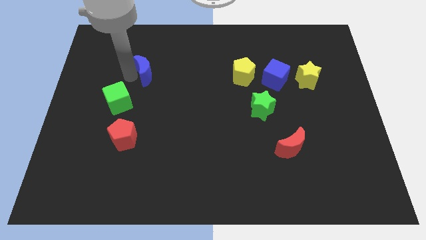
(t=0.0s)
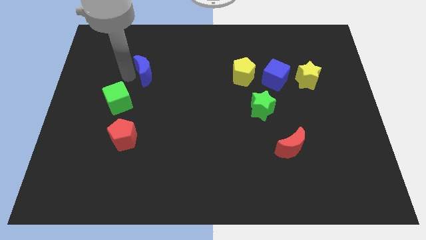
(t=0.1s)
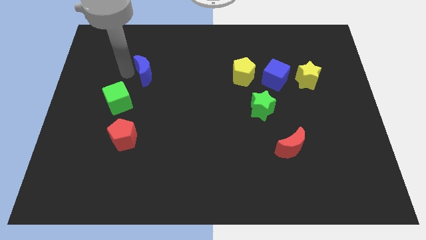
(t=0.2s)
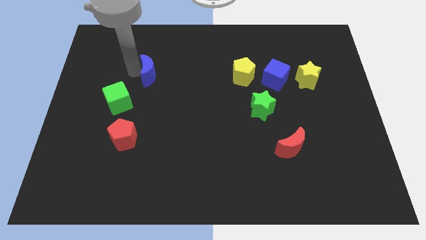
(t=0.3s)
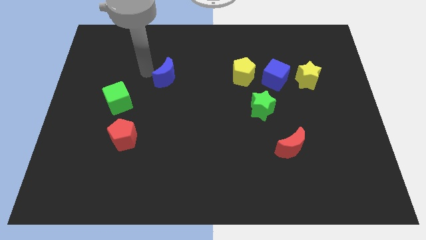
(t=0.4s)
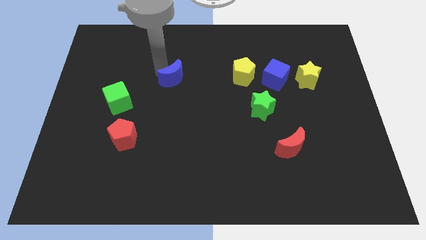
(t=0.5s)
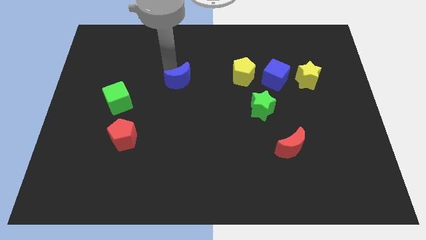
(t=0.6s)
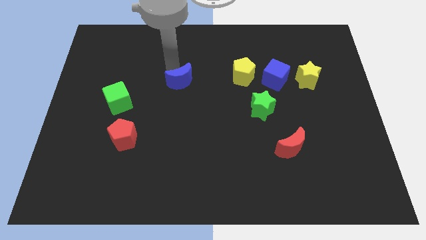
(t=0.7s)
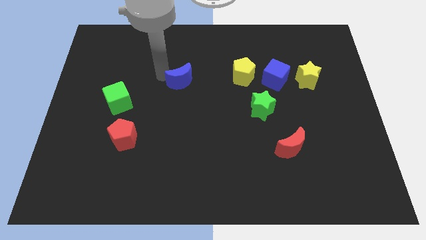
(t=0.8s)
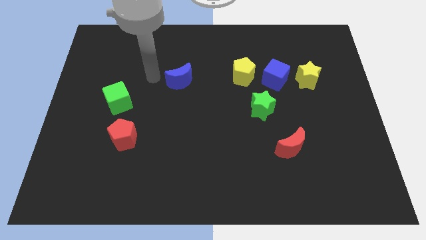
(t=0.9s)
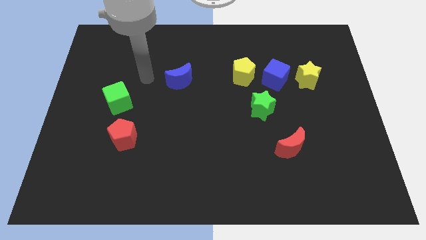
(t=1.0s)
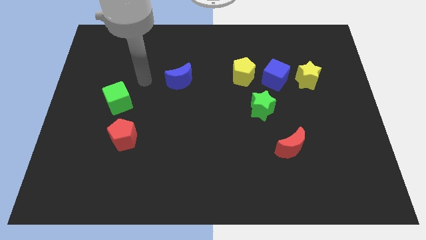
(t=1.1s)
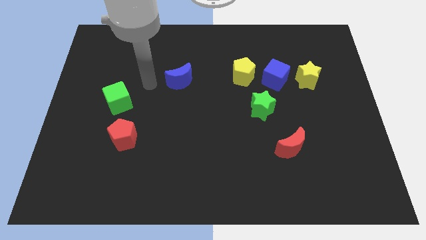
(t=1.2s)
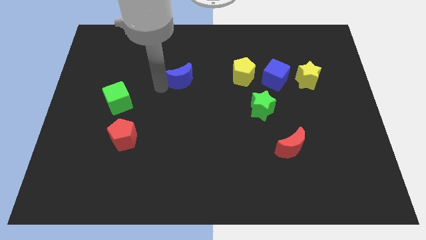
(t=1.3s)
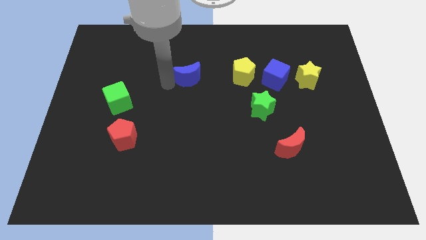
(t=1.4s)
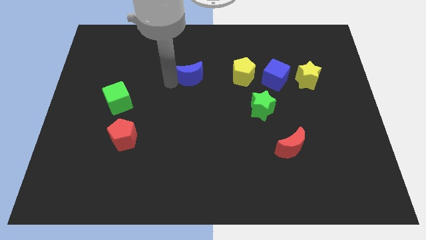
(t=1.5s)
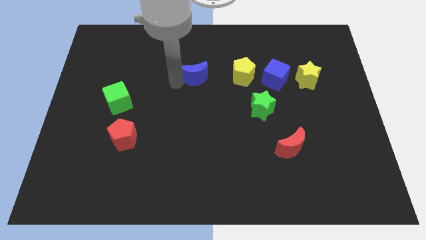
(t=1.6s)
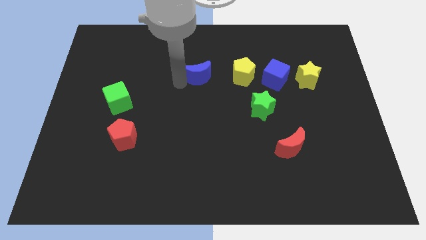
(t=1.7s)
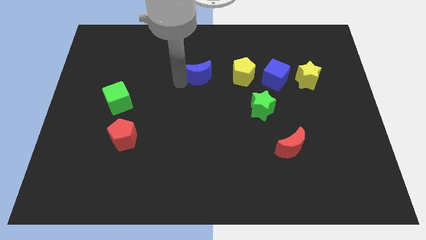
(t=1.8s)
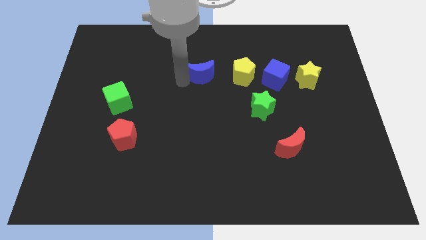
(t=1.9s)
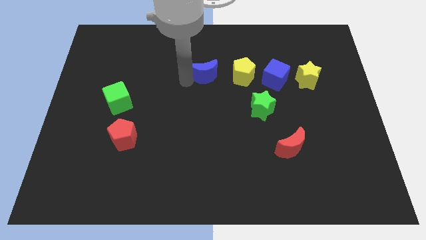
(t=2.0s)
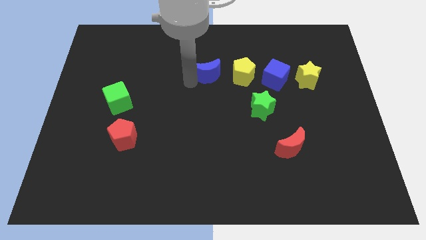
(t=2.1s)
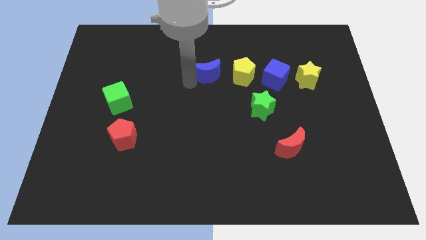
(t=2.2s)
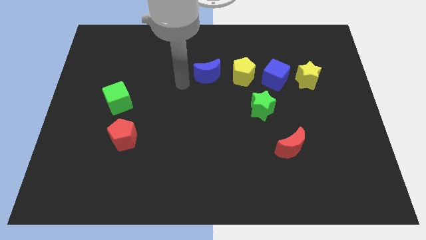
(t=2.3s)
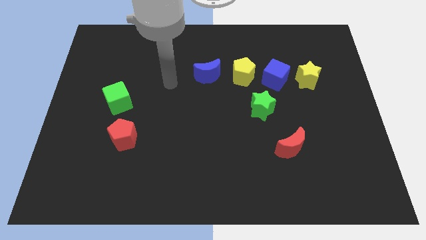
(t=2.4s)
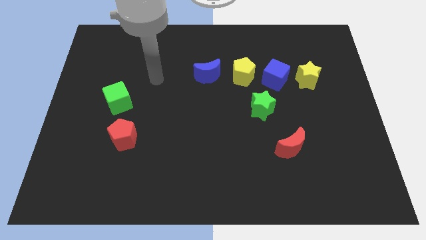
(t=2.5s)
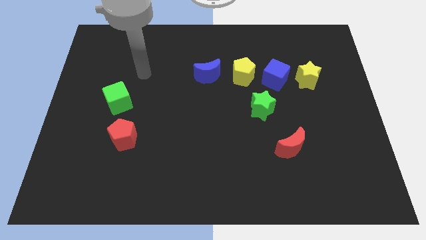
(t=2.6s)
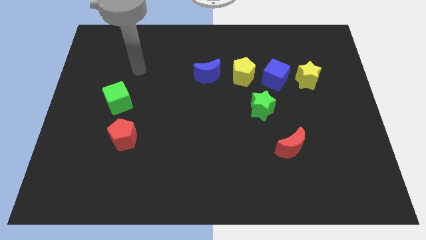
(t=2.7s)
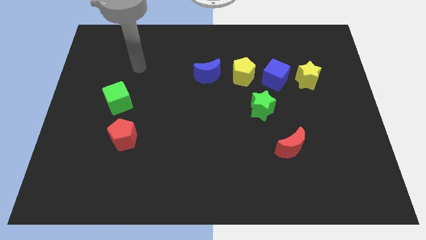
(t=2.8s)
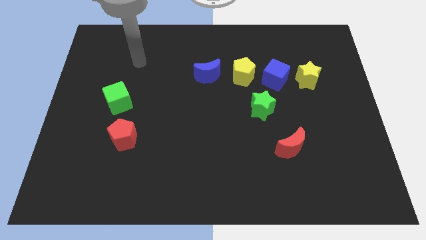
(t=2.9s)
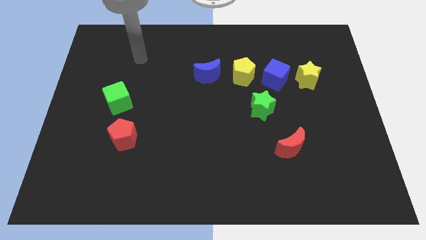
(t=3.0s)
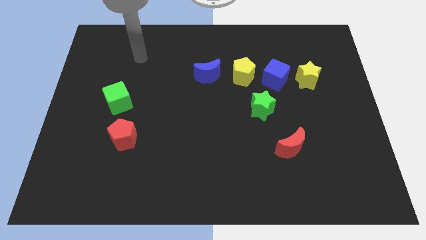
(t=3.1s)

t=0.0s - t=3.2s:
place blue moon to the left of yellow pentagon

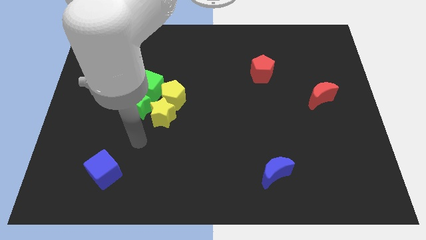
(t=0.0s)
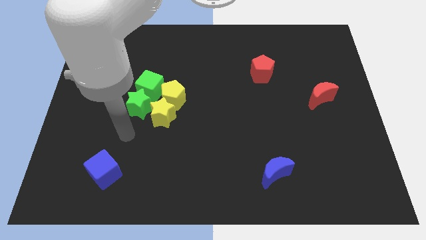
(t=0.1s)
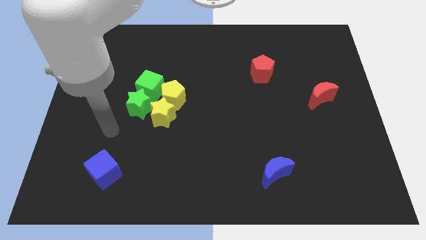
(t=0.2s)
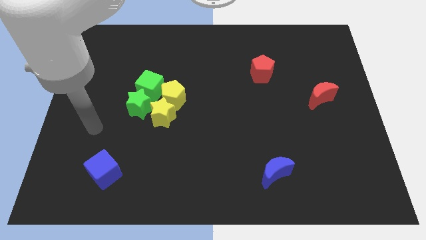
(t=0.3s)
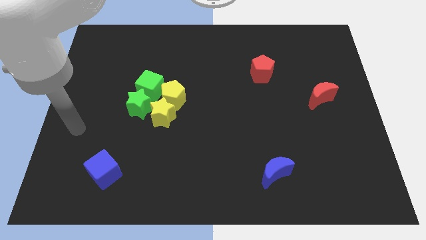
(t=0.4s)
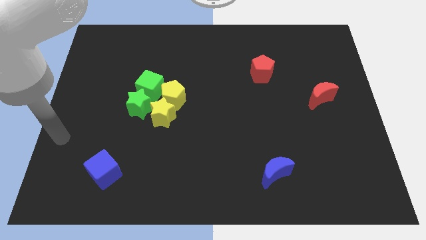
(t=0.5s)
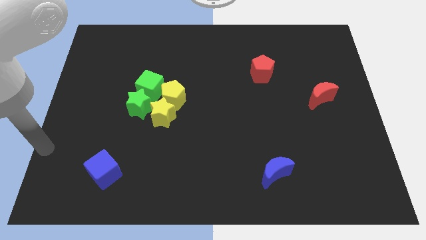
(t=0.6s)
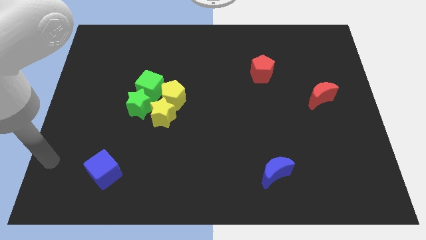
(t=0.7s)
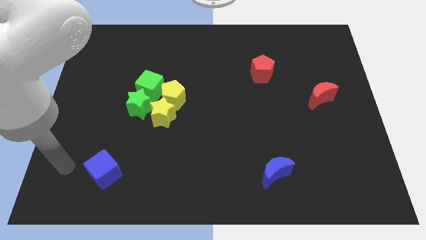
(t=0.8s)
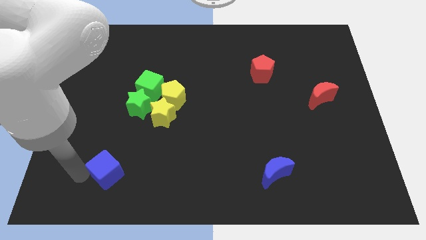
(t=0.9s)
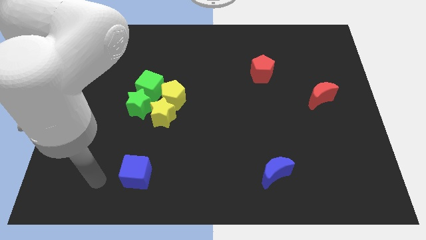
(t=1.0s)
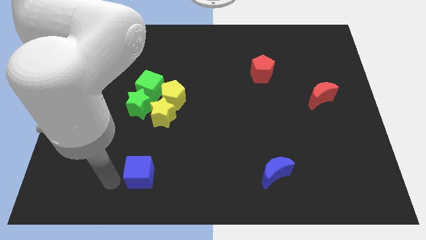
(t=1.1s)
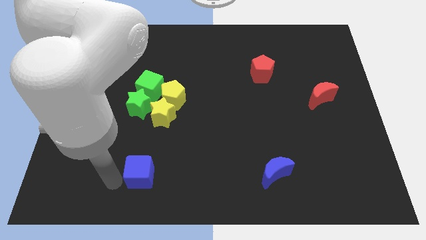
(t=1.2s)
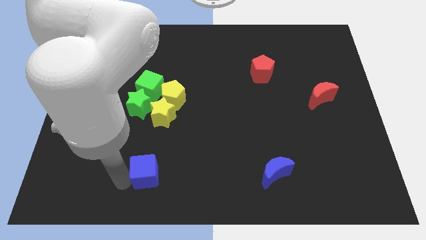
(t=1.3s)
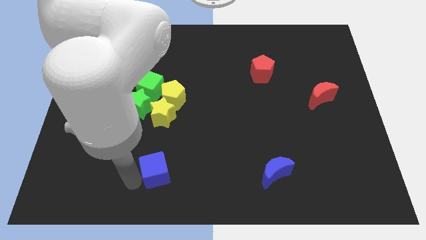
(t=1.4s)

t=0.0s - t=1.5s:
place blue cube to the bottom of yellow star

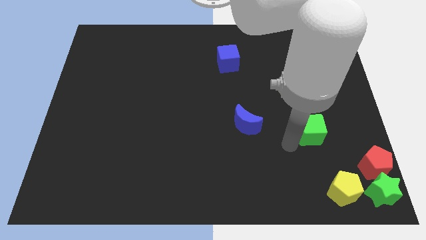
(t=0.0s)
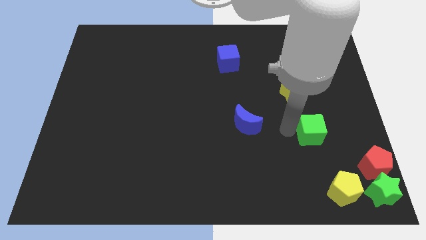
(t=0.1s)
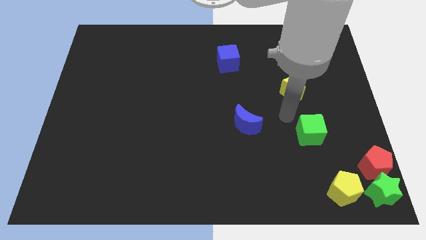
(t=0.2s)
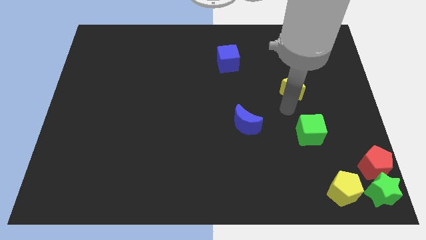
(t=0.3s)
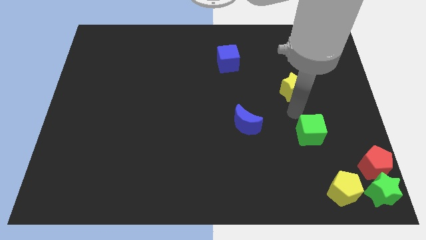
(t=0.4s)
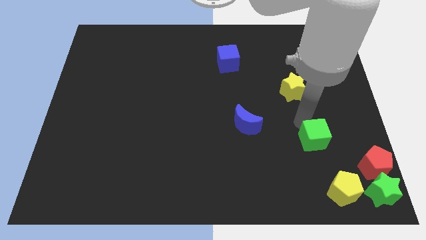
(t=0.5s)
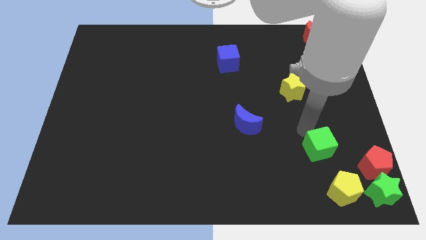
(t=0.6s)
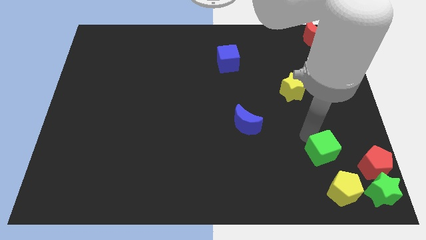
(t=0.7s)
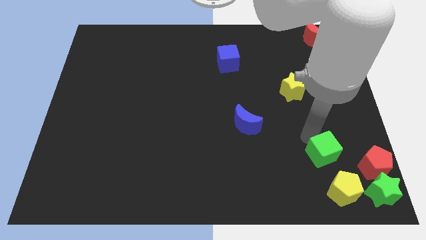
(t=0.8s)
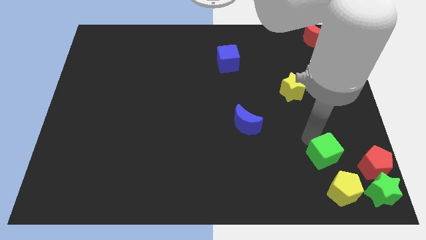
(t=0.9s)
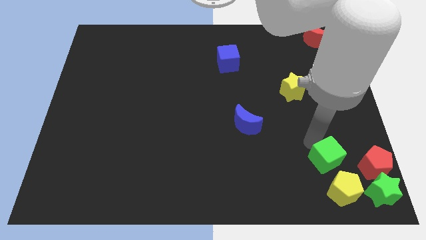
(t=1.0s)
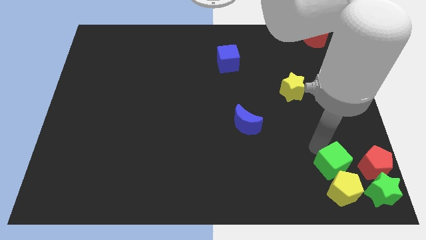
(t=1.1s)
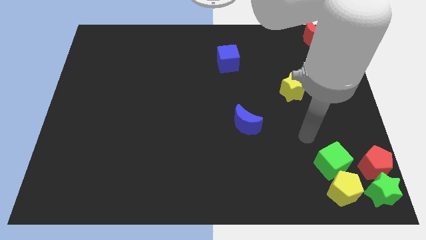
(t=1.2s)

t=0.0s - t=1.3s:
move the green cube to the left of the red pentagon

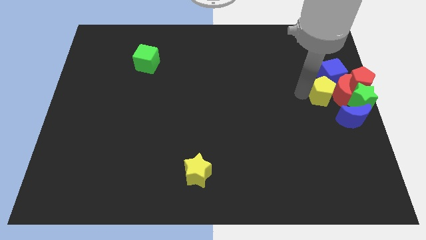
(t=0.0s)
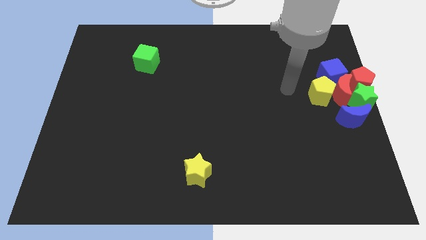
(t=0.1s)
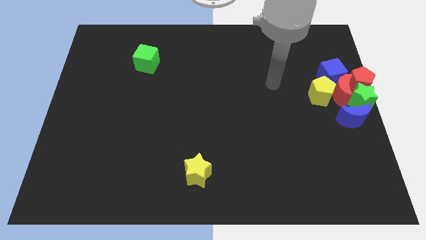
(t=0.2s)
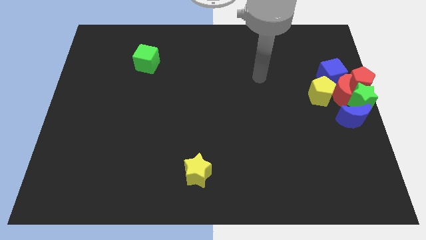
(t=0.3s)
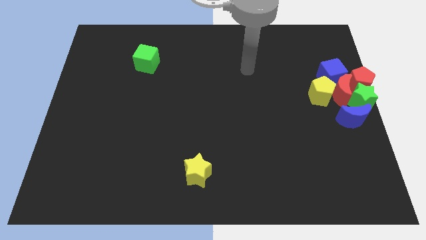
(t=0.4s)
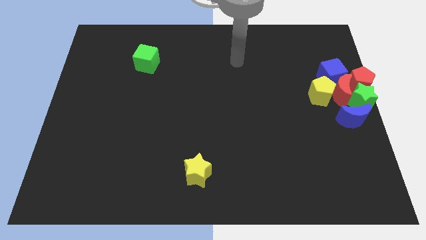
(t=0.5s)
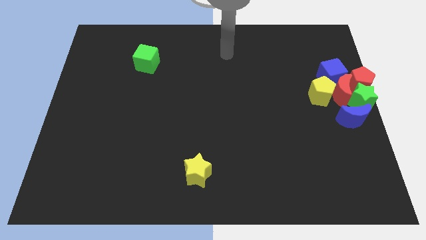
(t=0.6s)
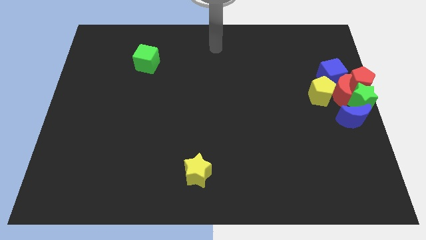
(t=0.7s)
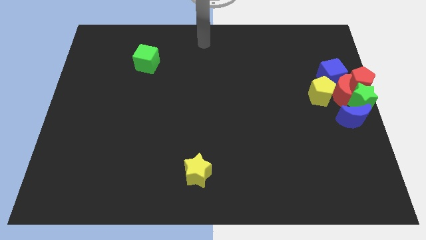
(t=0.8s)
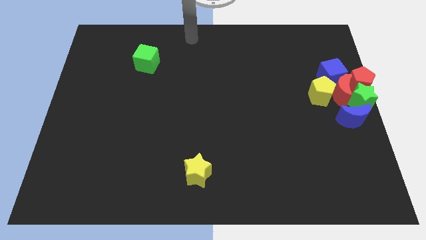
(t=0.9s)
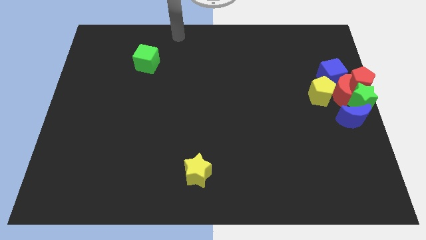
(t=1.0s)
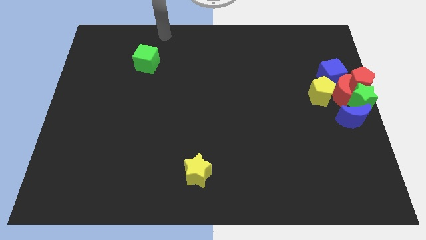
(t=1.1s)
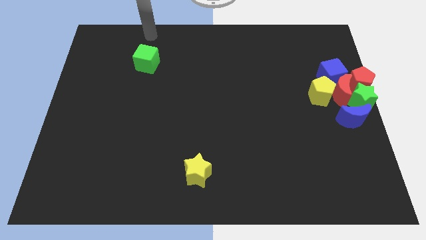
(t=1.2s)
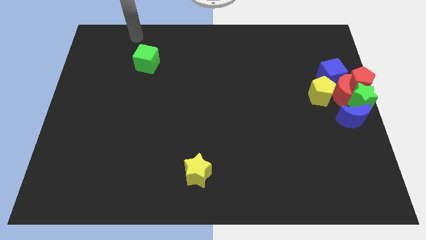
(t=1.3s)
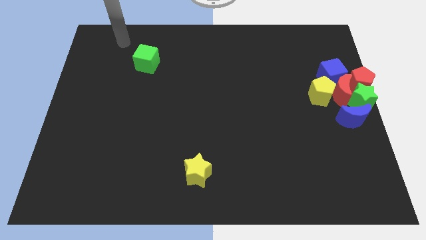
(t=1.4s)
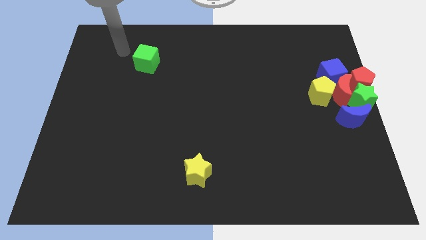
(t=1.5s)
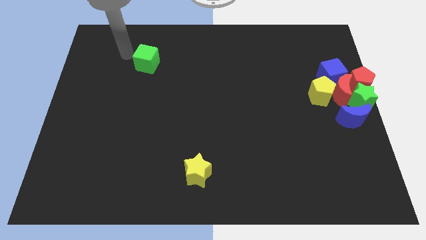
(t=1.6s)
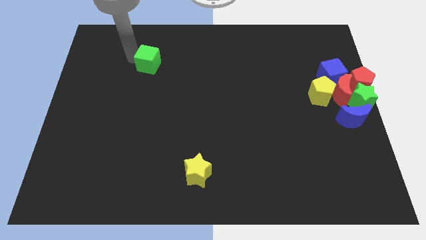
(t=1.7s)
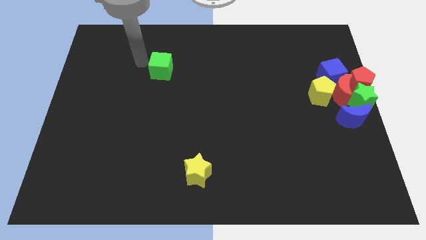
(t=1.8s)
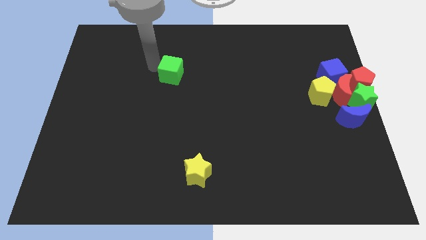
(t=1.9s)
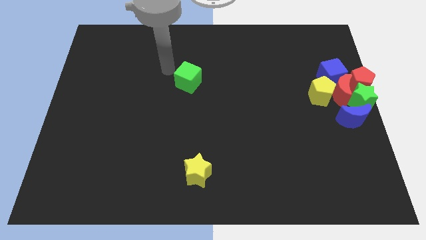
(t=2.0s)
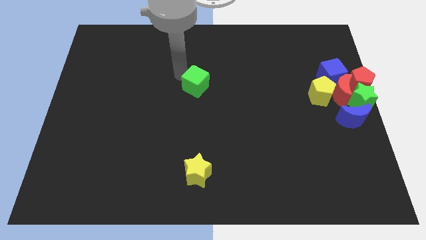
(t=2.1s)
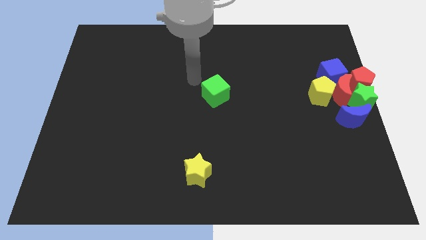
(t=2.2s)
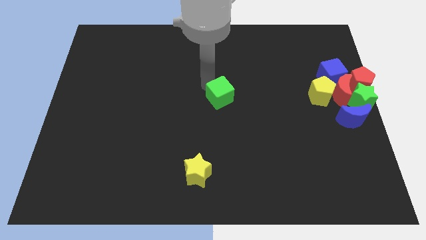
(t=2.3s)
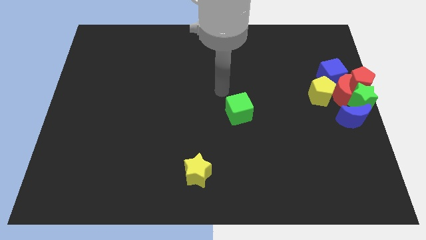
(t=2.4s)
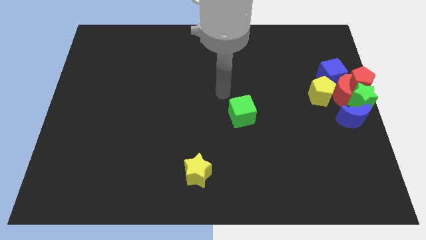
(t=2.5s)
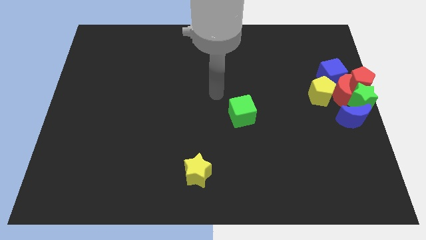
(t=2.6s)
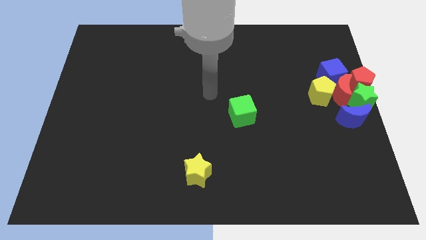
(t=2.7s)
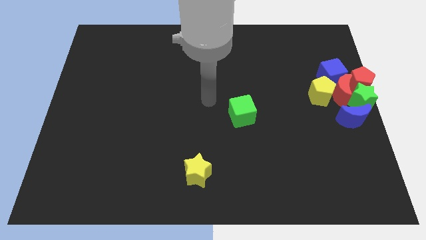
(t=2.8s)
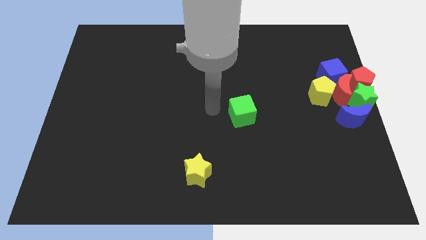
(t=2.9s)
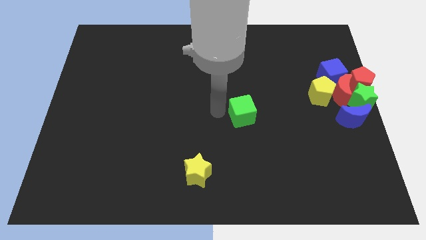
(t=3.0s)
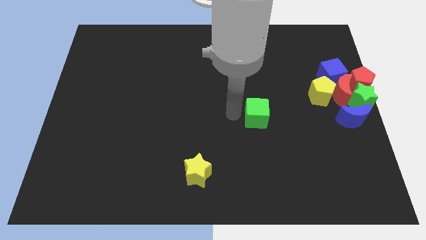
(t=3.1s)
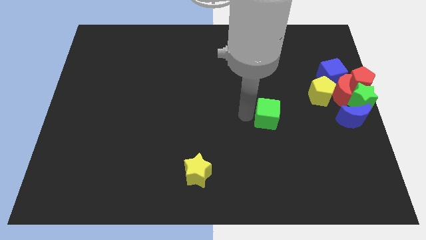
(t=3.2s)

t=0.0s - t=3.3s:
move the green cube towards the group of blocks
